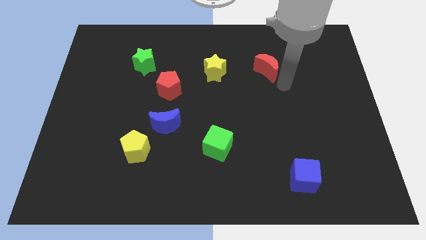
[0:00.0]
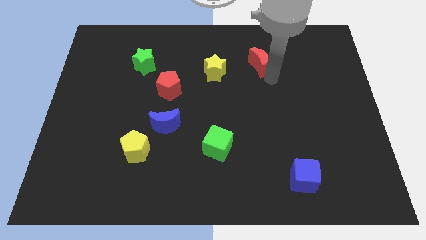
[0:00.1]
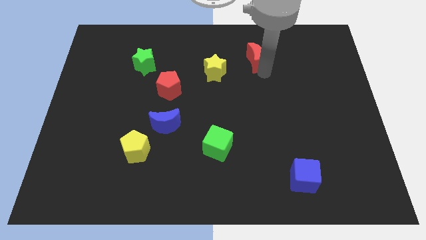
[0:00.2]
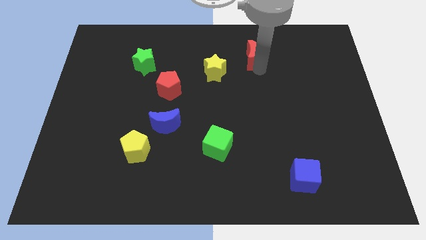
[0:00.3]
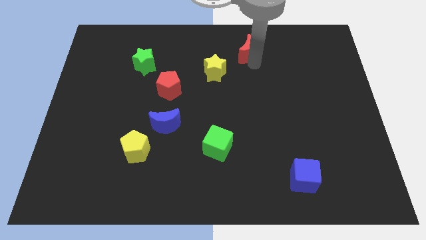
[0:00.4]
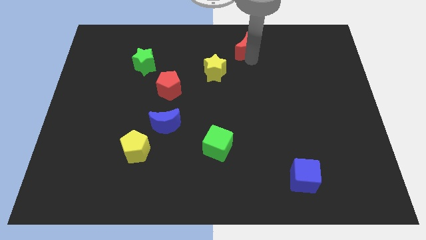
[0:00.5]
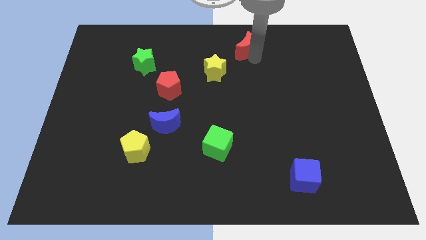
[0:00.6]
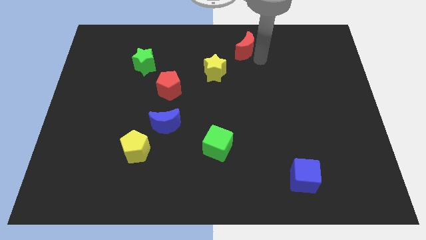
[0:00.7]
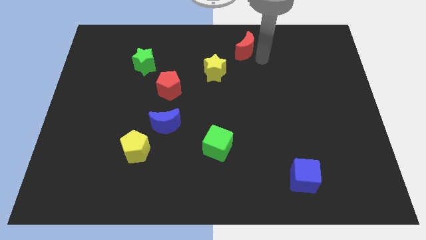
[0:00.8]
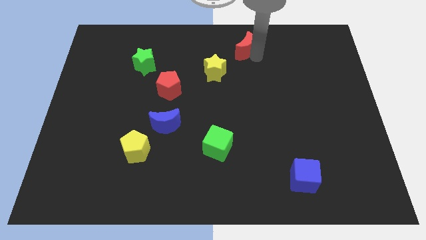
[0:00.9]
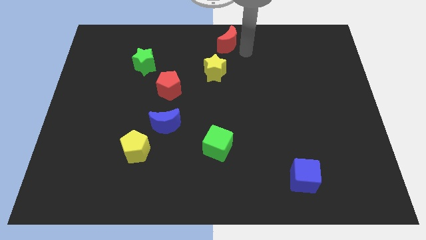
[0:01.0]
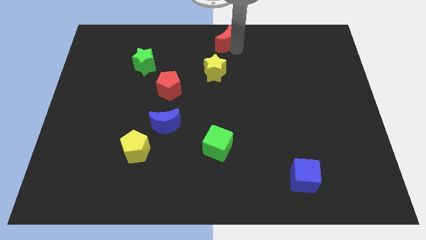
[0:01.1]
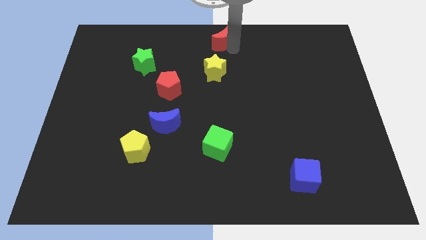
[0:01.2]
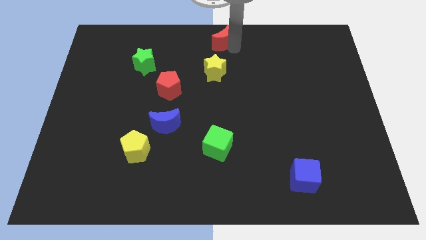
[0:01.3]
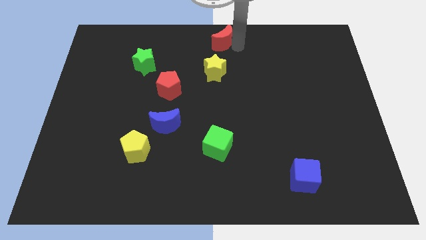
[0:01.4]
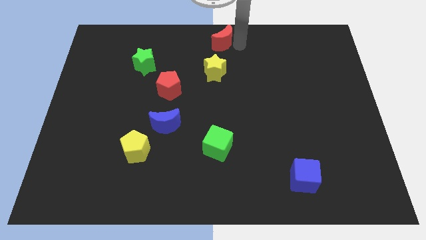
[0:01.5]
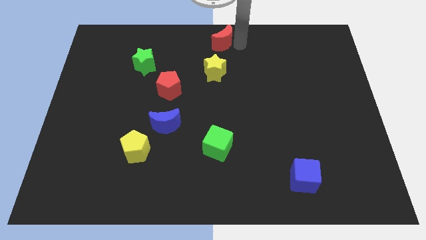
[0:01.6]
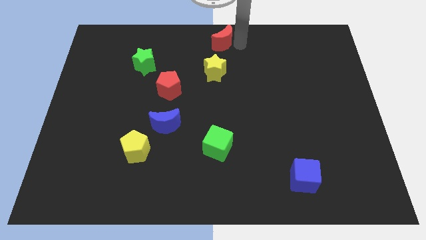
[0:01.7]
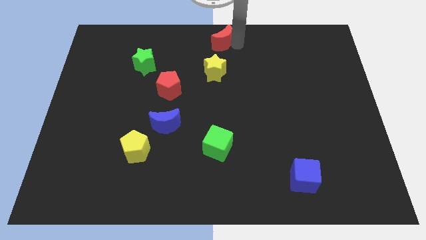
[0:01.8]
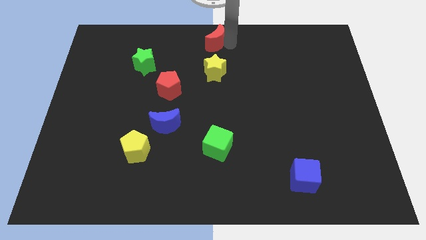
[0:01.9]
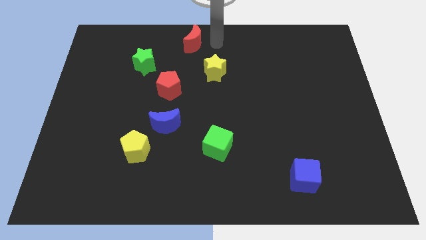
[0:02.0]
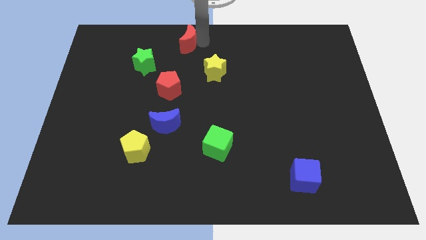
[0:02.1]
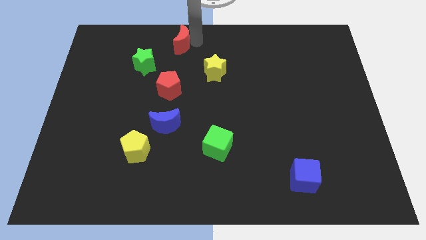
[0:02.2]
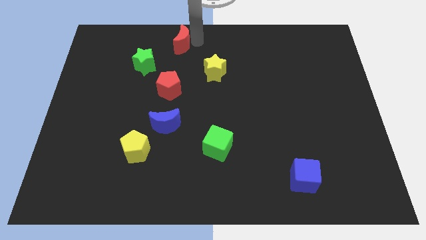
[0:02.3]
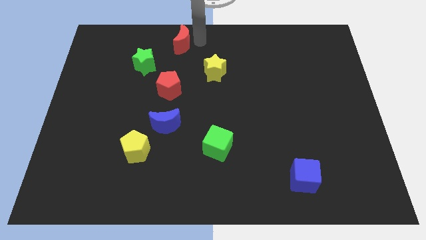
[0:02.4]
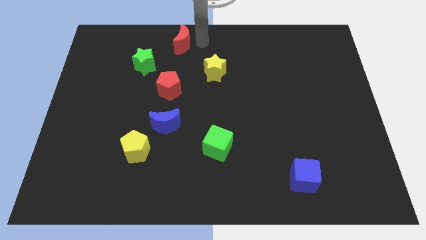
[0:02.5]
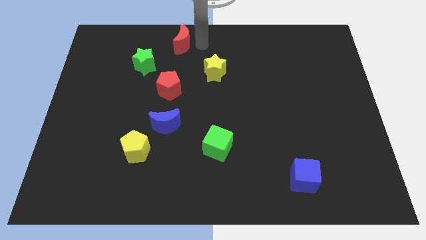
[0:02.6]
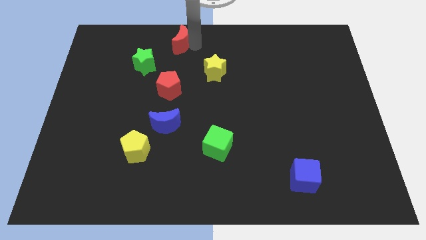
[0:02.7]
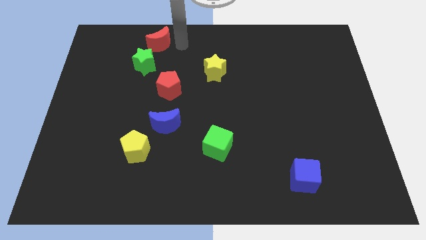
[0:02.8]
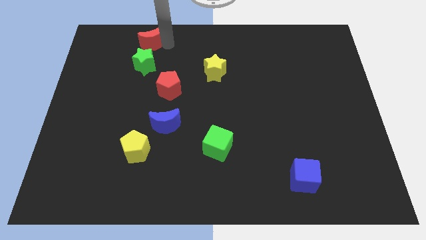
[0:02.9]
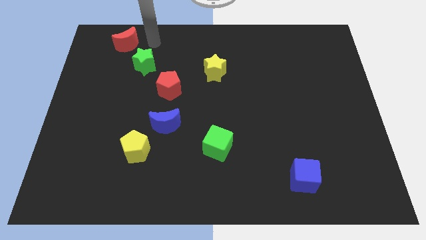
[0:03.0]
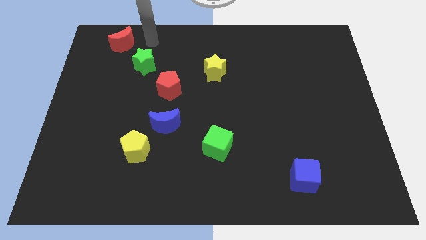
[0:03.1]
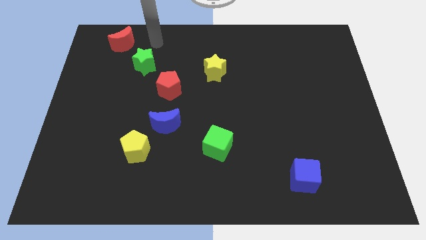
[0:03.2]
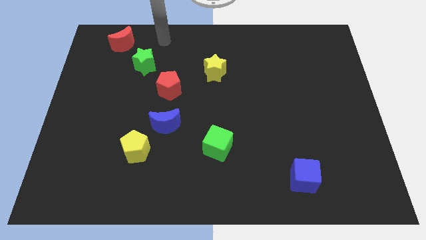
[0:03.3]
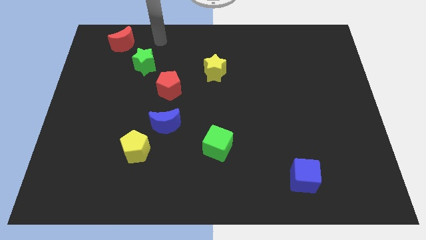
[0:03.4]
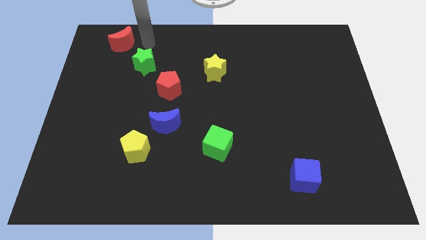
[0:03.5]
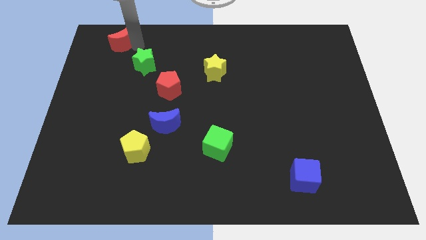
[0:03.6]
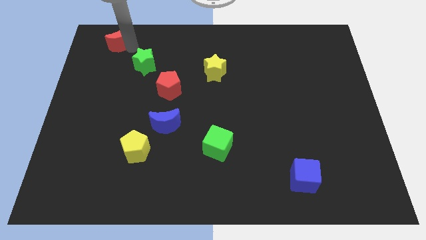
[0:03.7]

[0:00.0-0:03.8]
push the red crescent to the top left of the board

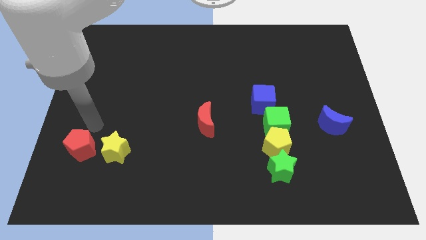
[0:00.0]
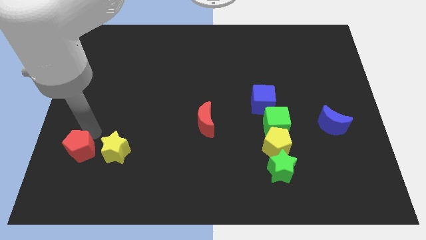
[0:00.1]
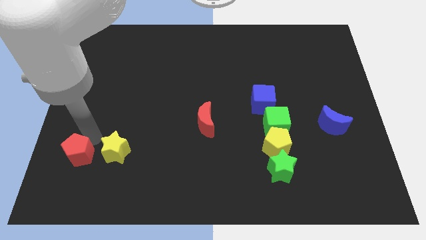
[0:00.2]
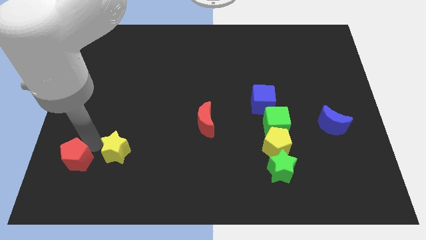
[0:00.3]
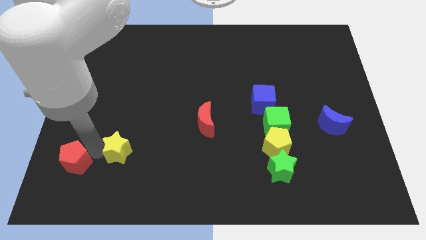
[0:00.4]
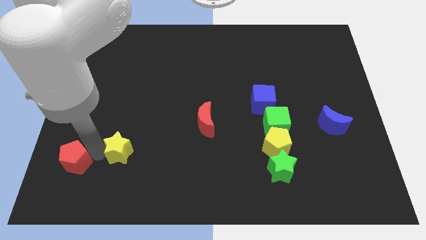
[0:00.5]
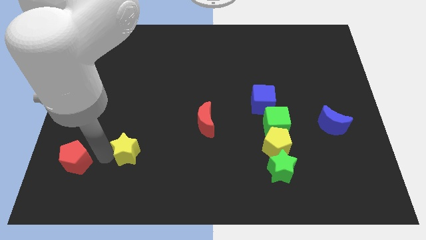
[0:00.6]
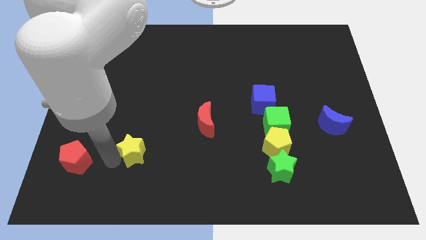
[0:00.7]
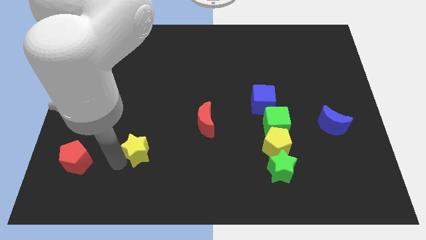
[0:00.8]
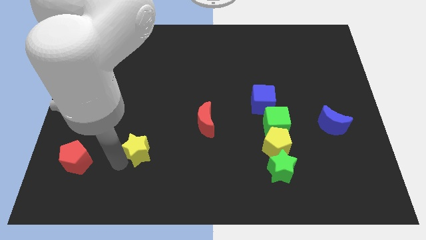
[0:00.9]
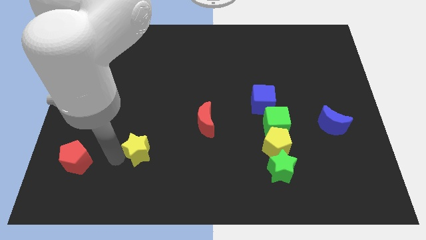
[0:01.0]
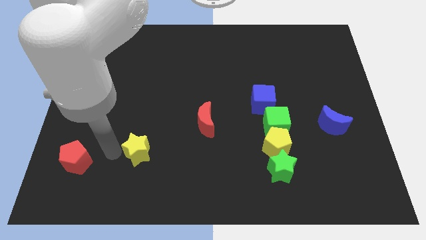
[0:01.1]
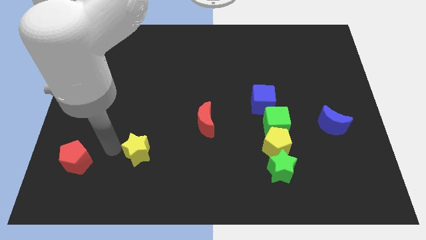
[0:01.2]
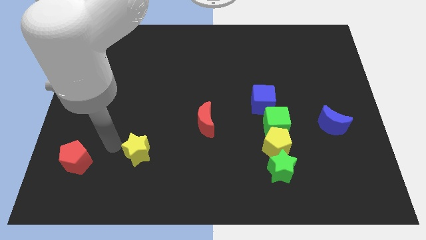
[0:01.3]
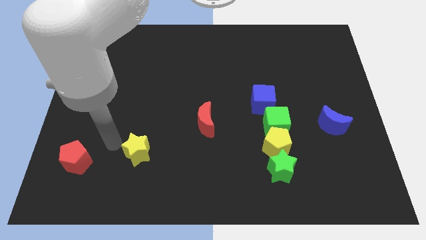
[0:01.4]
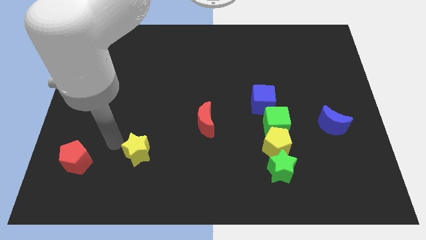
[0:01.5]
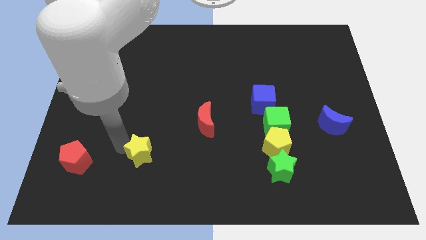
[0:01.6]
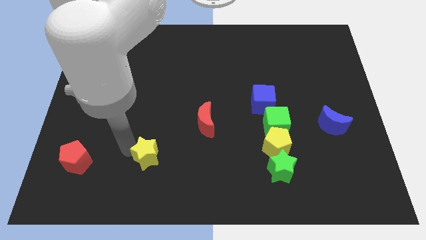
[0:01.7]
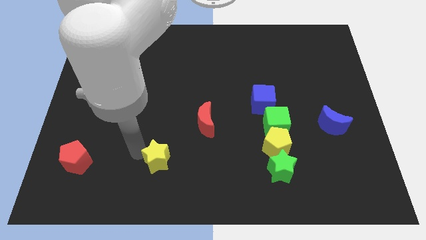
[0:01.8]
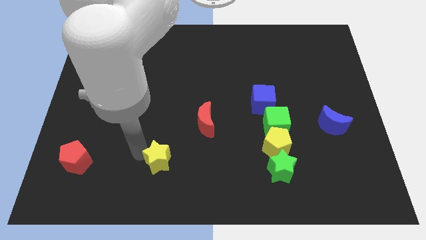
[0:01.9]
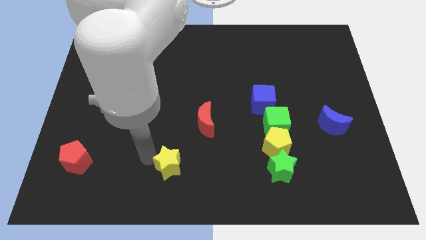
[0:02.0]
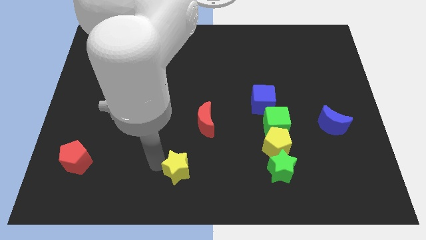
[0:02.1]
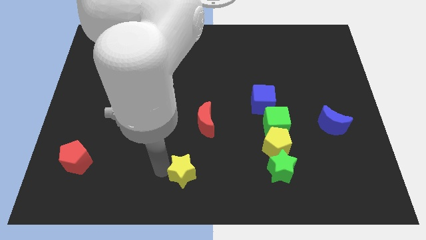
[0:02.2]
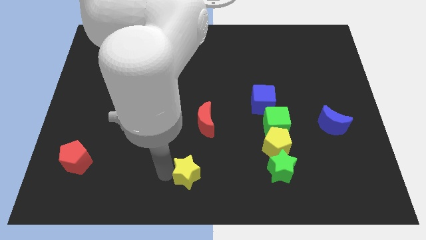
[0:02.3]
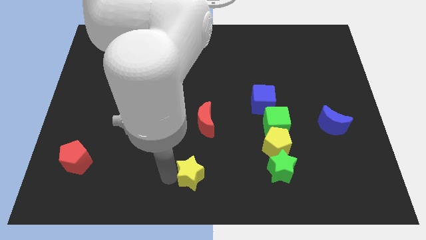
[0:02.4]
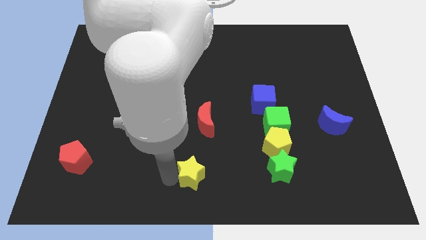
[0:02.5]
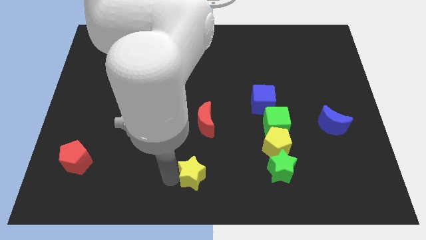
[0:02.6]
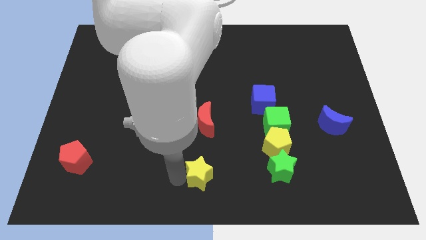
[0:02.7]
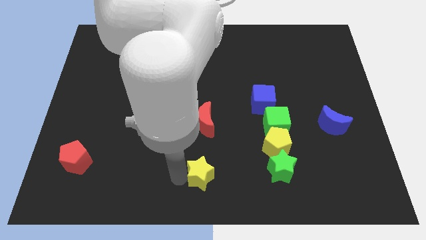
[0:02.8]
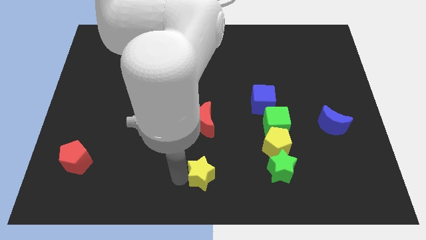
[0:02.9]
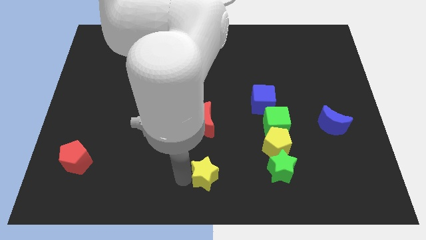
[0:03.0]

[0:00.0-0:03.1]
separate yellow star from red pentagon

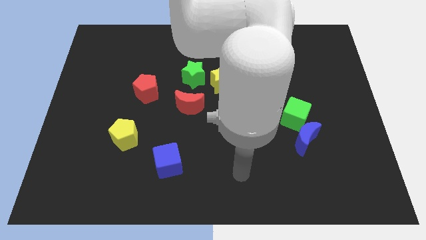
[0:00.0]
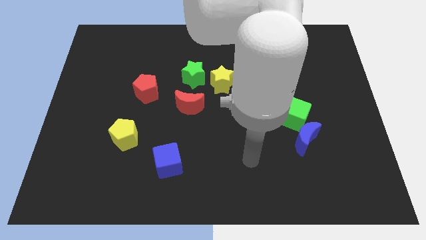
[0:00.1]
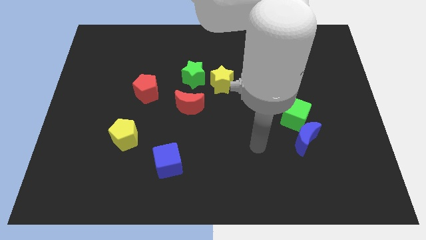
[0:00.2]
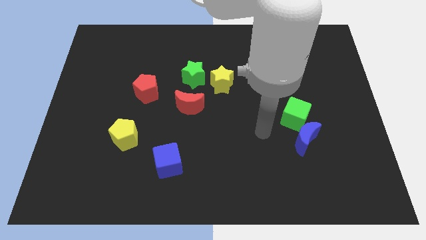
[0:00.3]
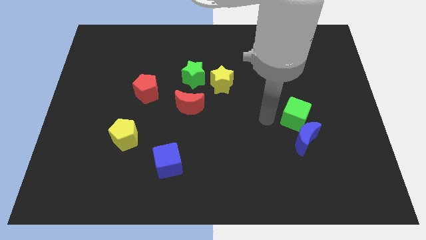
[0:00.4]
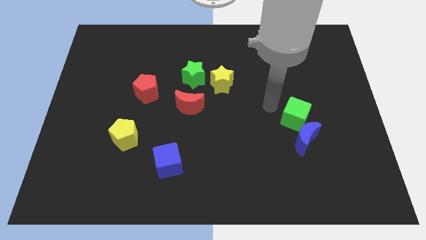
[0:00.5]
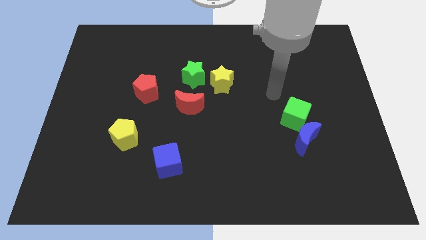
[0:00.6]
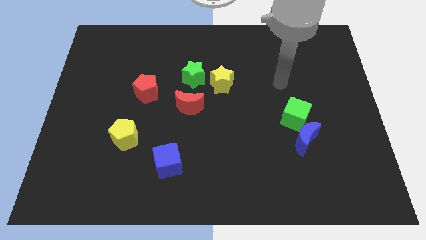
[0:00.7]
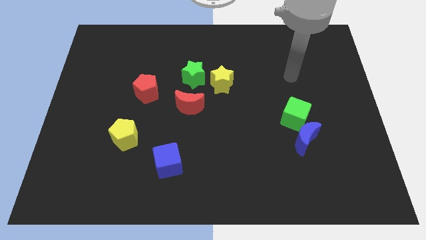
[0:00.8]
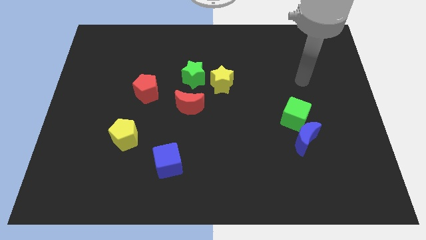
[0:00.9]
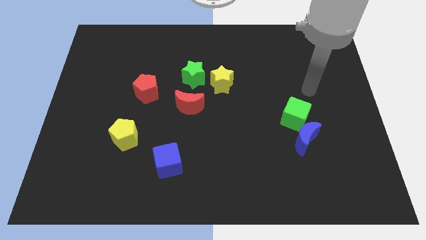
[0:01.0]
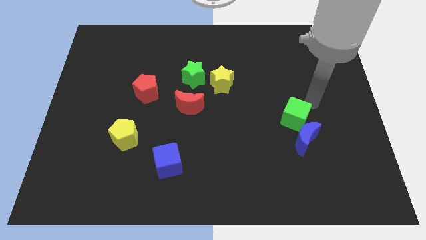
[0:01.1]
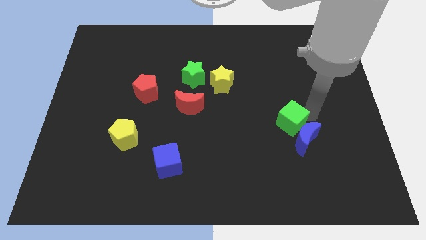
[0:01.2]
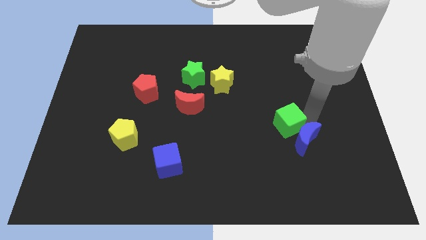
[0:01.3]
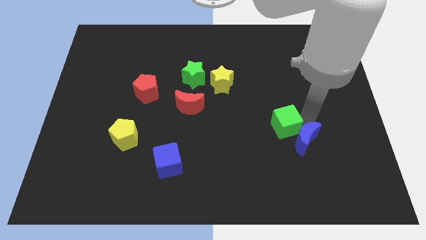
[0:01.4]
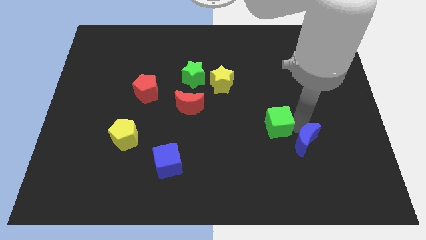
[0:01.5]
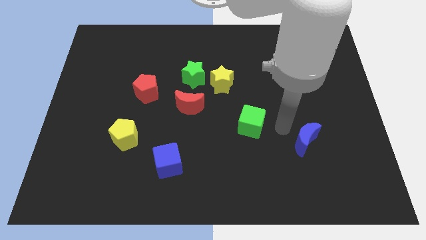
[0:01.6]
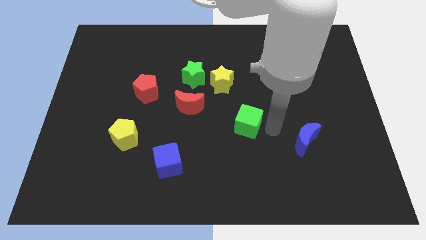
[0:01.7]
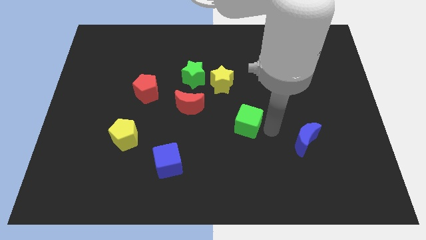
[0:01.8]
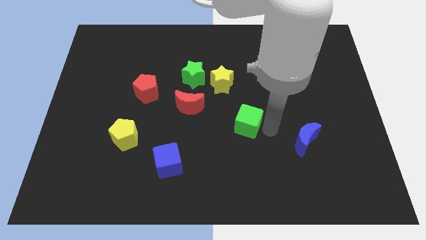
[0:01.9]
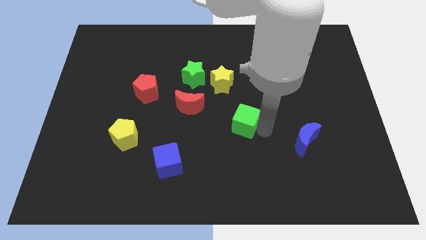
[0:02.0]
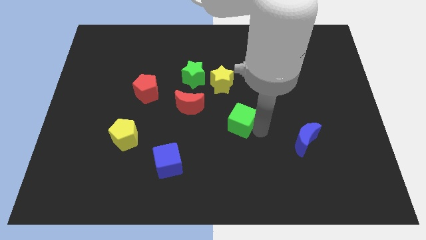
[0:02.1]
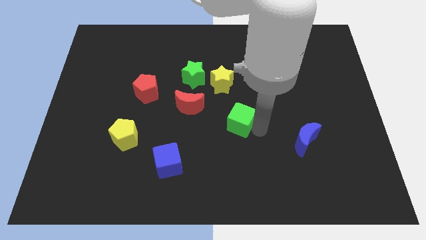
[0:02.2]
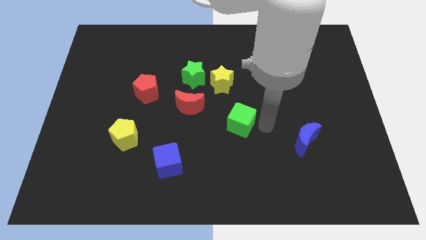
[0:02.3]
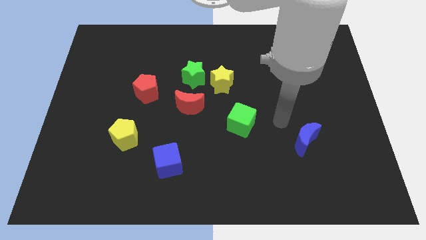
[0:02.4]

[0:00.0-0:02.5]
push the green cube diagonal to the red crescent

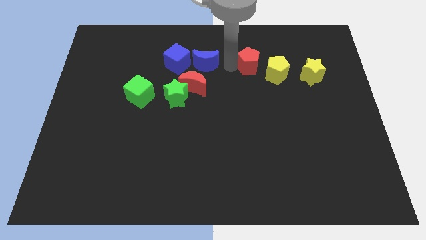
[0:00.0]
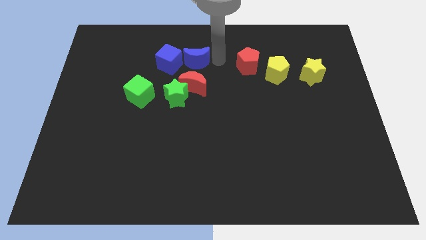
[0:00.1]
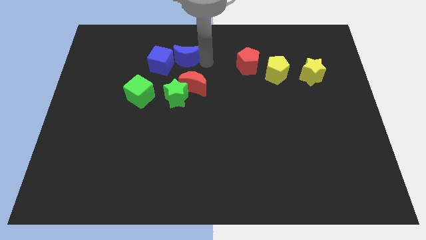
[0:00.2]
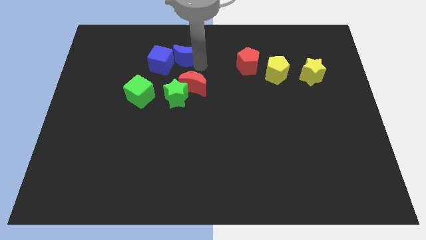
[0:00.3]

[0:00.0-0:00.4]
move the blue cube left to the blue crescent
